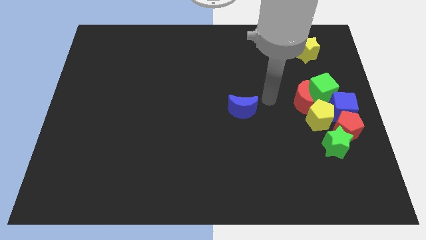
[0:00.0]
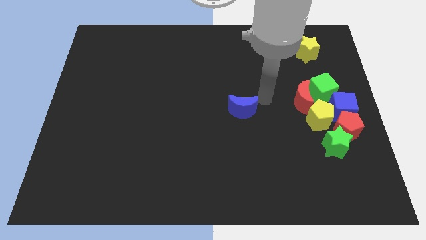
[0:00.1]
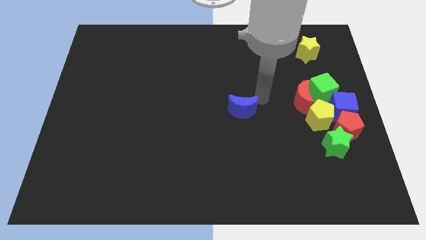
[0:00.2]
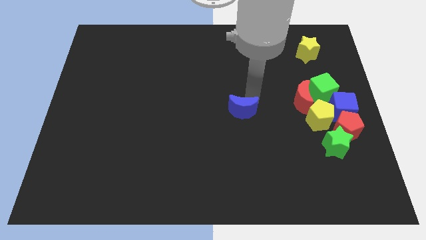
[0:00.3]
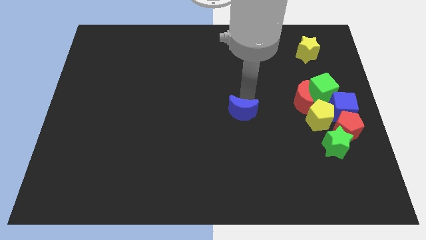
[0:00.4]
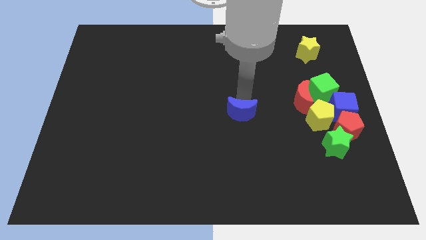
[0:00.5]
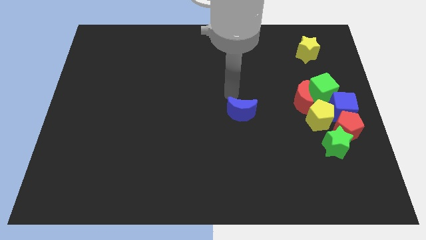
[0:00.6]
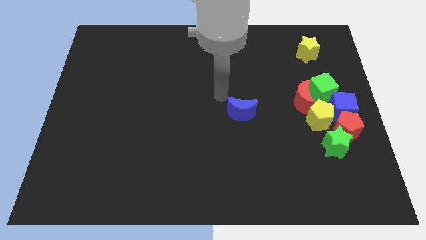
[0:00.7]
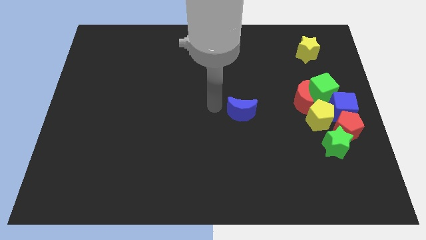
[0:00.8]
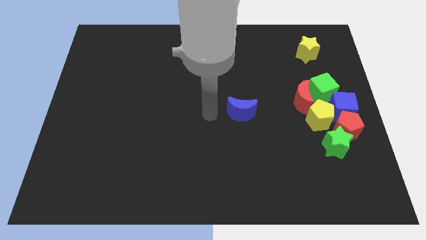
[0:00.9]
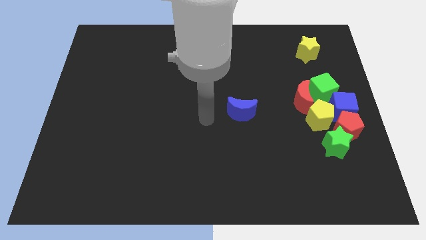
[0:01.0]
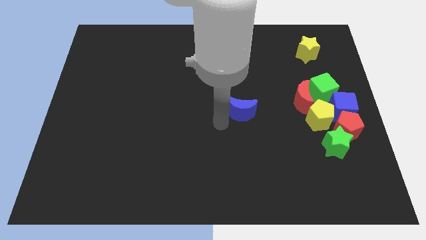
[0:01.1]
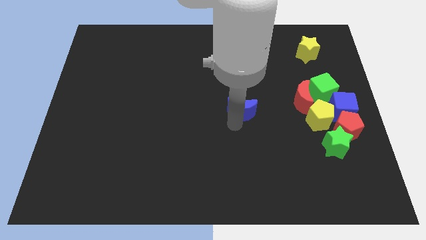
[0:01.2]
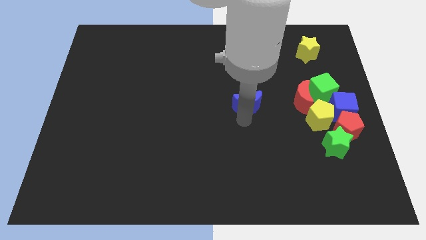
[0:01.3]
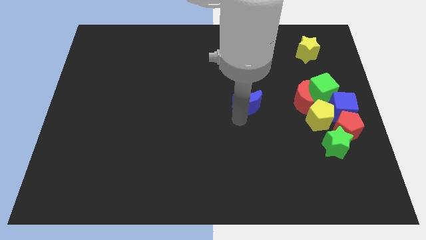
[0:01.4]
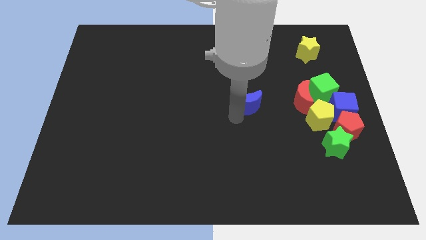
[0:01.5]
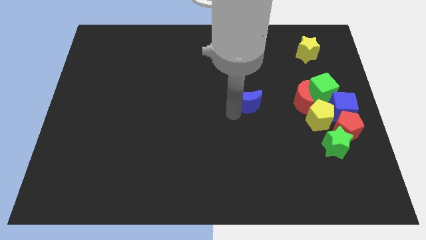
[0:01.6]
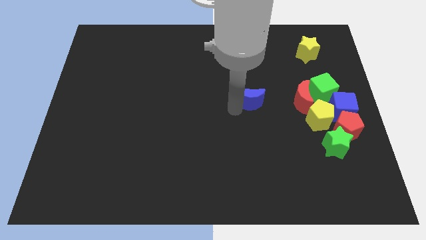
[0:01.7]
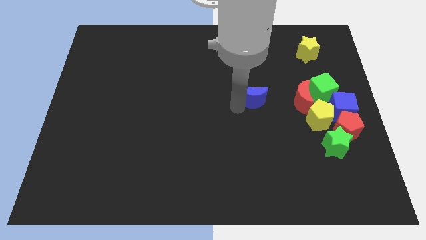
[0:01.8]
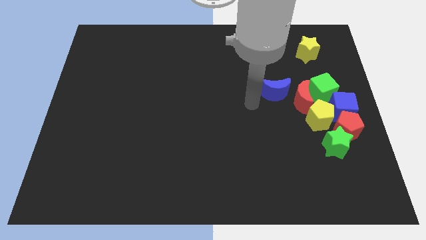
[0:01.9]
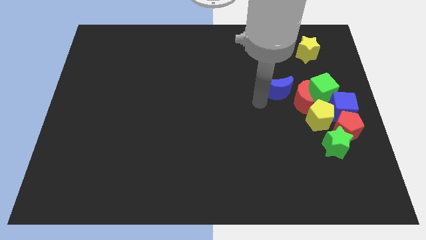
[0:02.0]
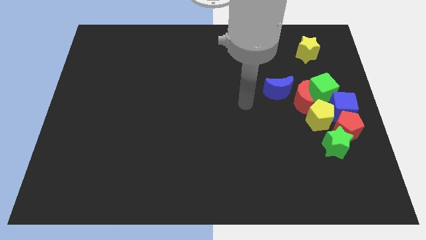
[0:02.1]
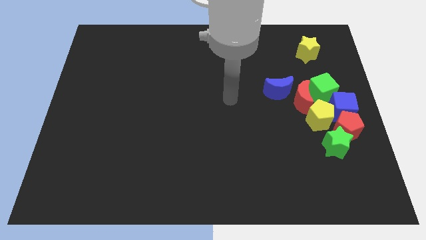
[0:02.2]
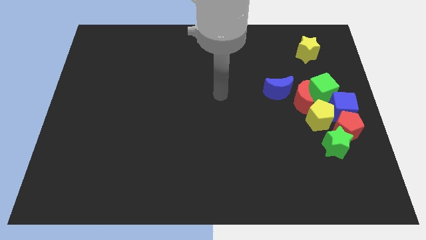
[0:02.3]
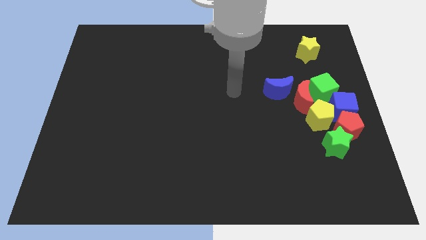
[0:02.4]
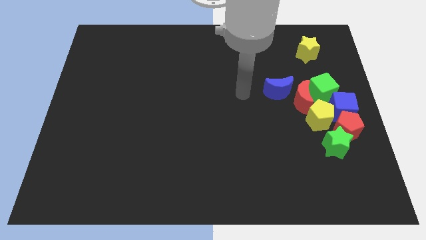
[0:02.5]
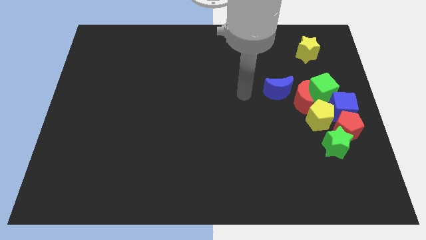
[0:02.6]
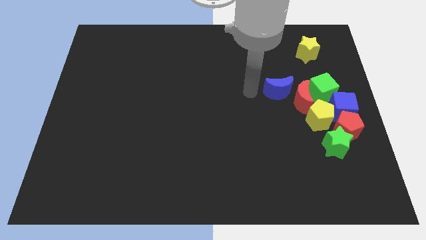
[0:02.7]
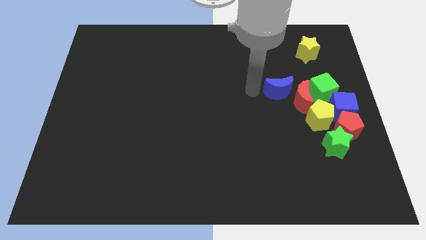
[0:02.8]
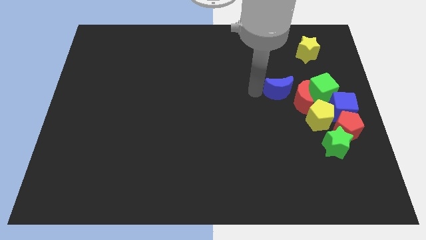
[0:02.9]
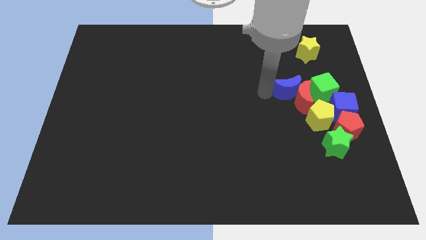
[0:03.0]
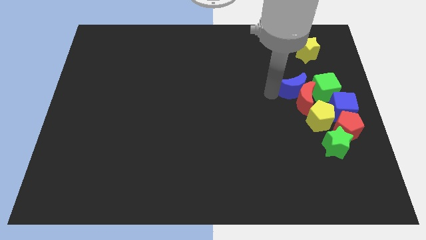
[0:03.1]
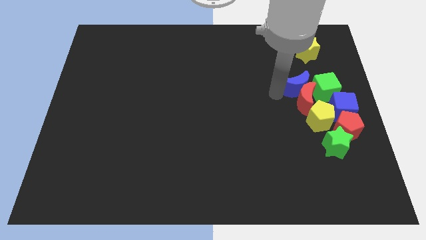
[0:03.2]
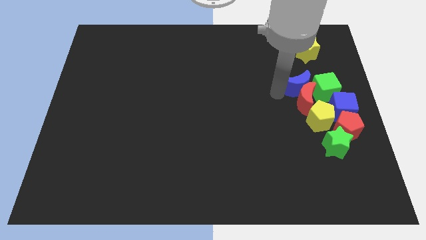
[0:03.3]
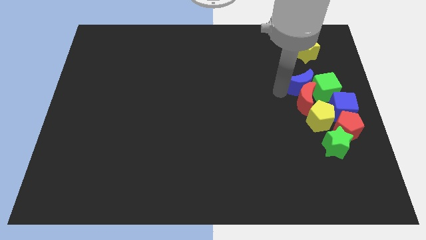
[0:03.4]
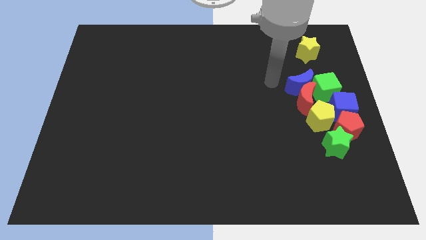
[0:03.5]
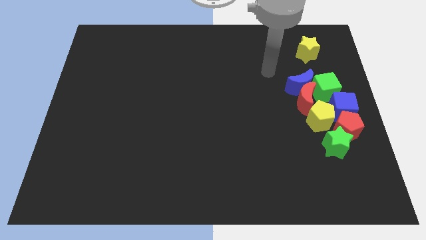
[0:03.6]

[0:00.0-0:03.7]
move the blue crescent towards the top of the red crescent

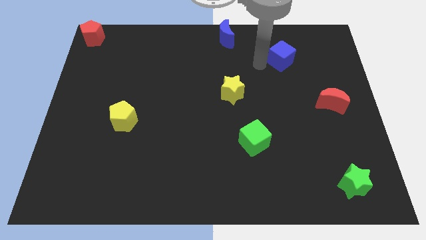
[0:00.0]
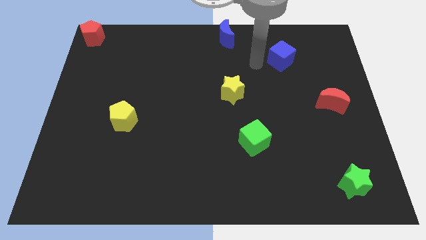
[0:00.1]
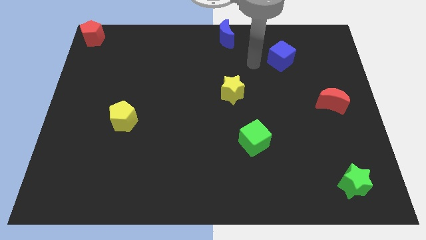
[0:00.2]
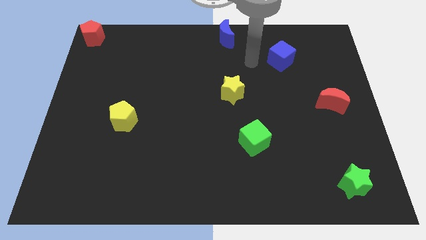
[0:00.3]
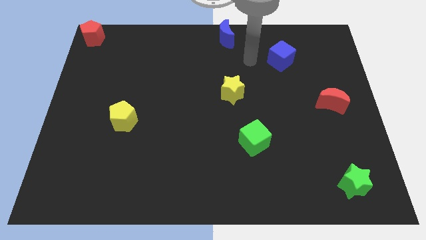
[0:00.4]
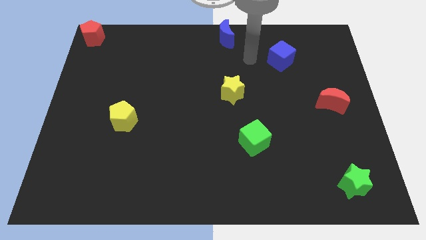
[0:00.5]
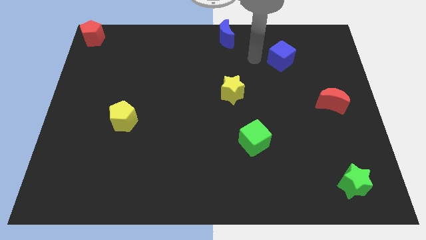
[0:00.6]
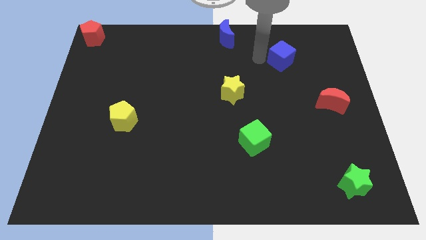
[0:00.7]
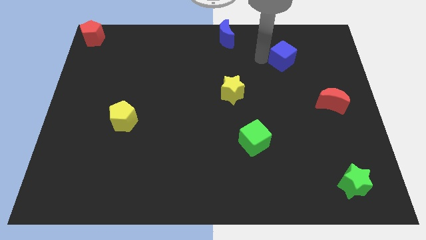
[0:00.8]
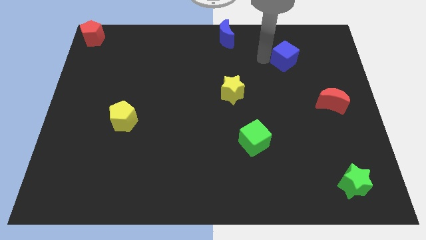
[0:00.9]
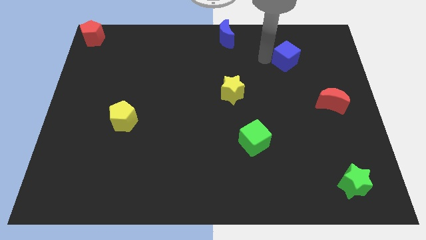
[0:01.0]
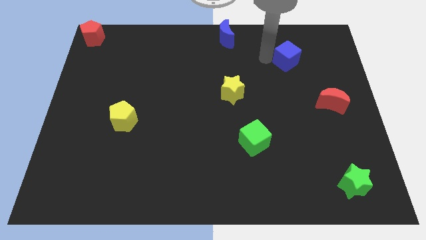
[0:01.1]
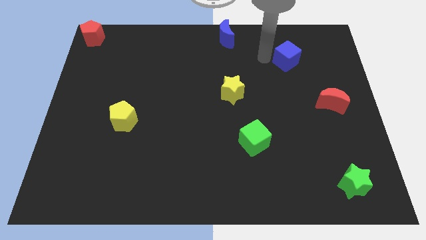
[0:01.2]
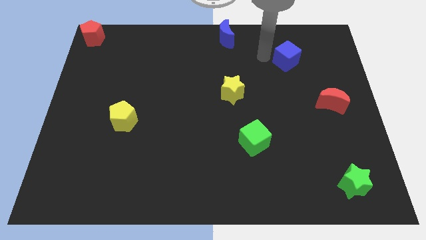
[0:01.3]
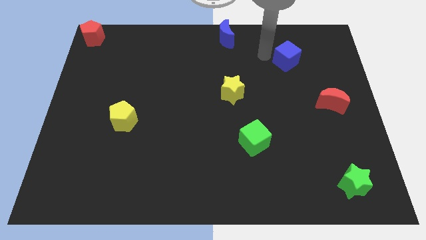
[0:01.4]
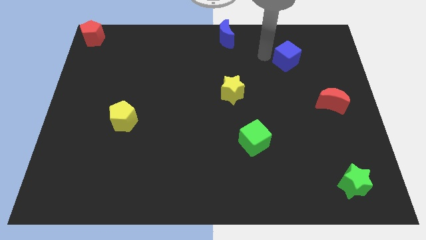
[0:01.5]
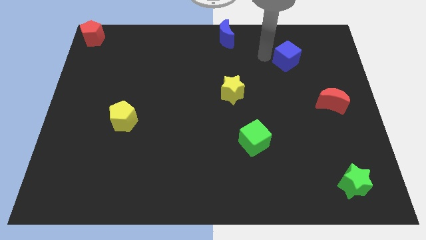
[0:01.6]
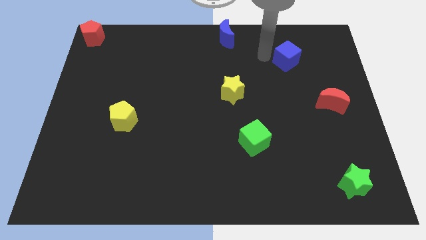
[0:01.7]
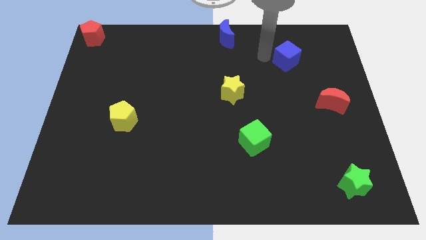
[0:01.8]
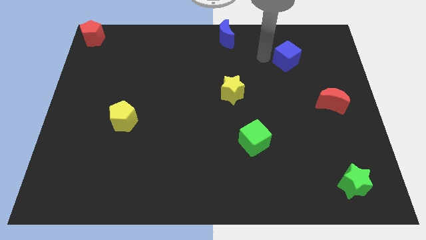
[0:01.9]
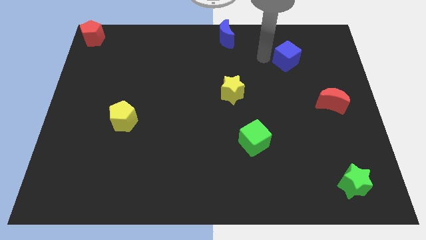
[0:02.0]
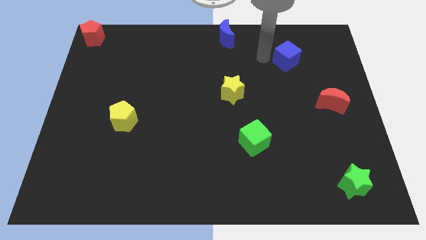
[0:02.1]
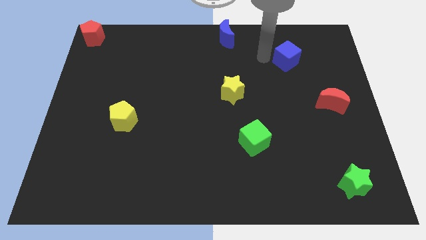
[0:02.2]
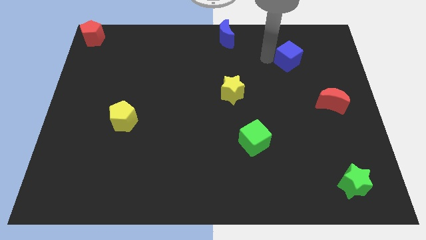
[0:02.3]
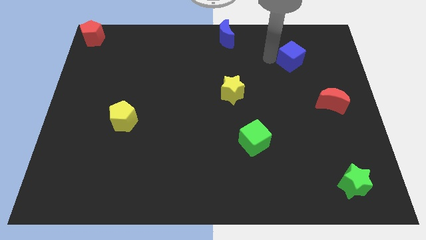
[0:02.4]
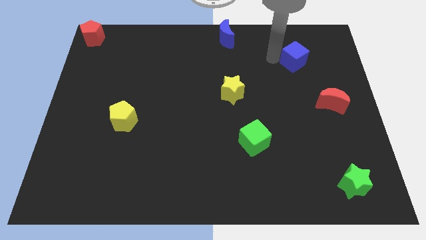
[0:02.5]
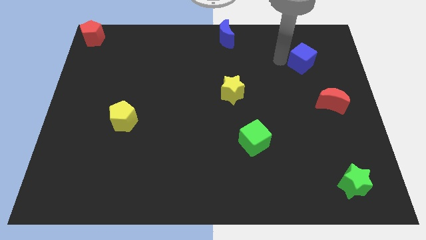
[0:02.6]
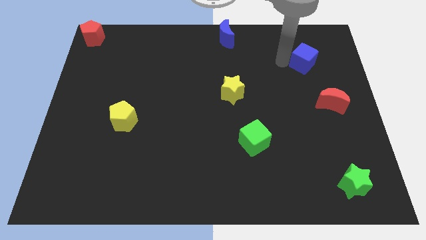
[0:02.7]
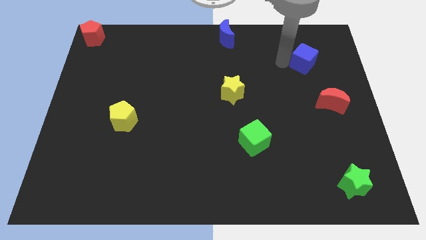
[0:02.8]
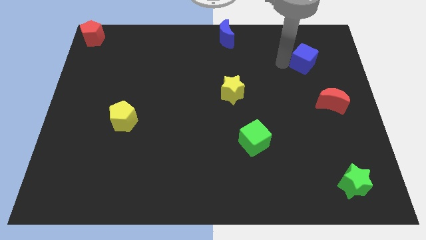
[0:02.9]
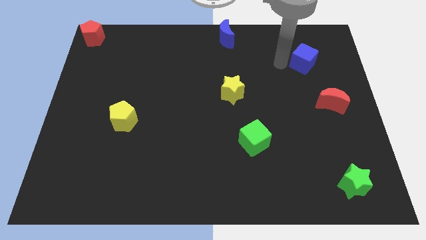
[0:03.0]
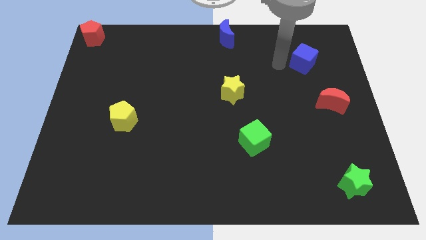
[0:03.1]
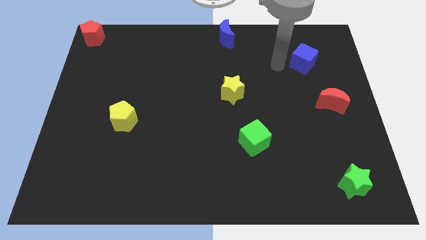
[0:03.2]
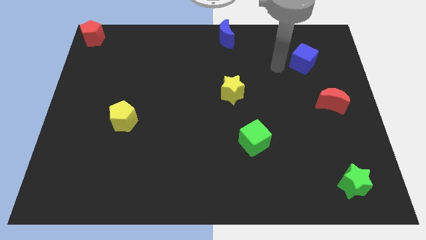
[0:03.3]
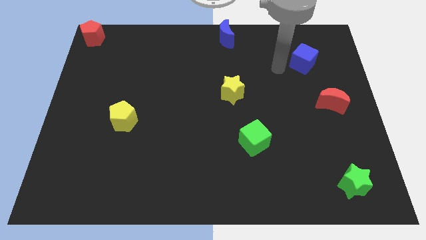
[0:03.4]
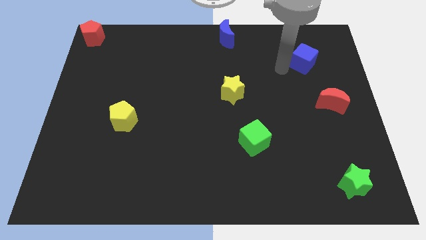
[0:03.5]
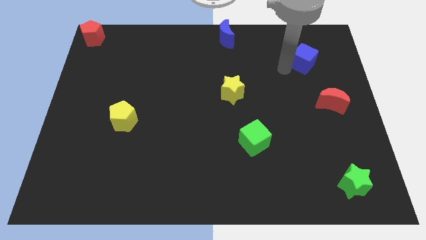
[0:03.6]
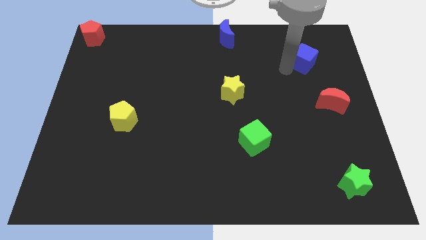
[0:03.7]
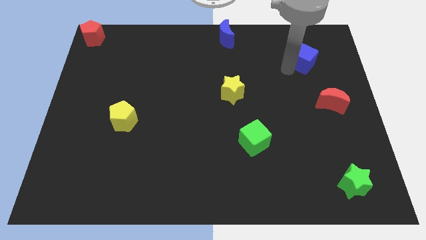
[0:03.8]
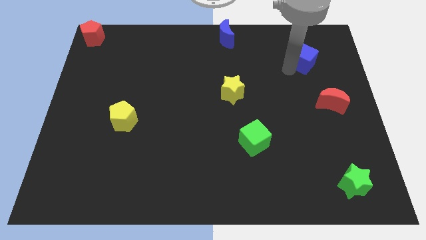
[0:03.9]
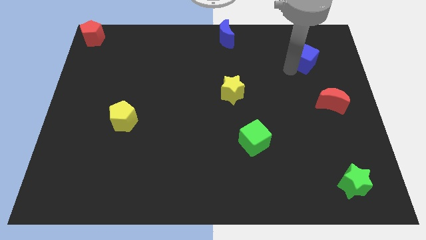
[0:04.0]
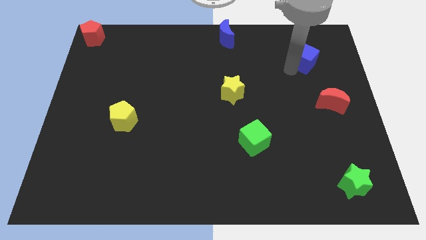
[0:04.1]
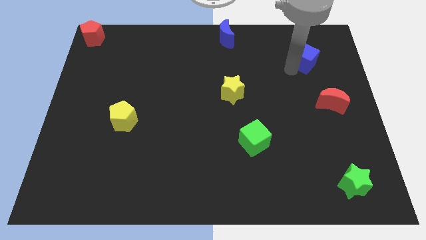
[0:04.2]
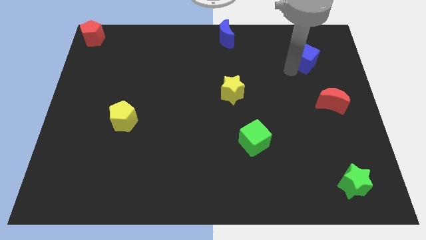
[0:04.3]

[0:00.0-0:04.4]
push the blue cube towards the top right of the board

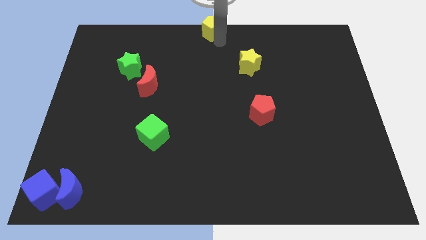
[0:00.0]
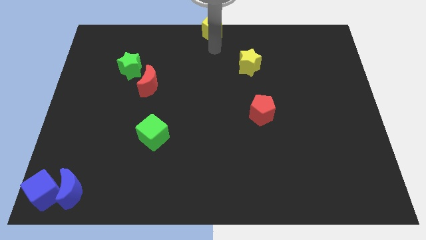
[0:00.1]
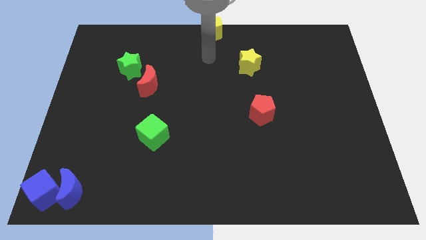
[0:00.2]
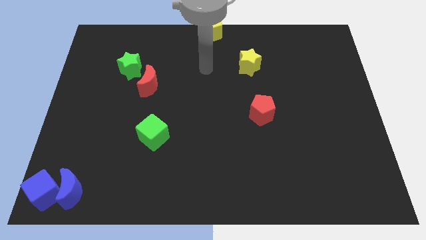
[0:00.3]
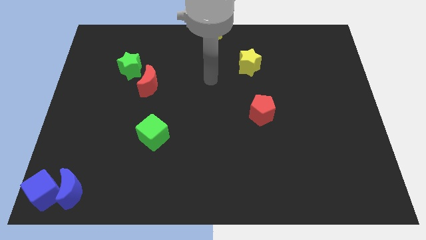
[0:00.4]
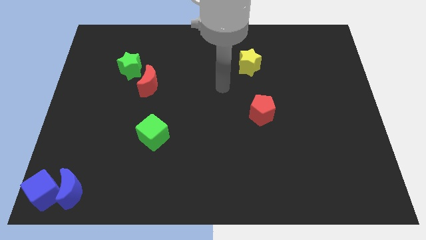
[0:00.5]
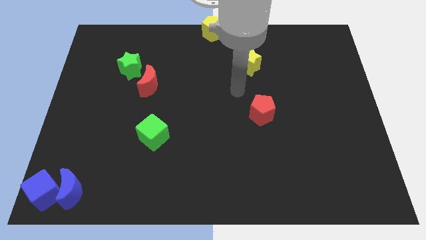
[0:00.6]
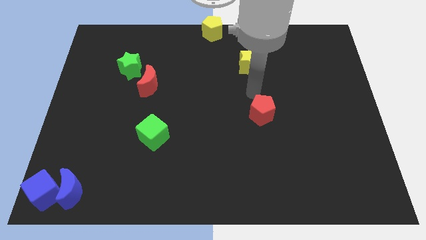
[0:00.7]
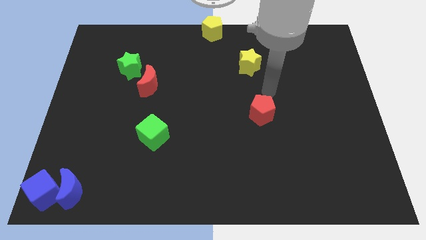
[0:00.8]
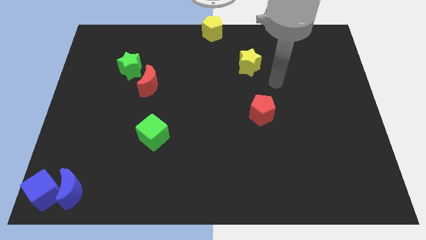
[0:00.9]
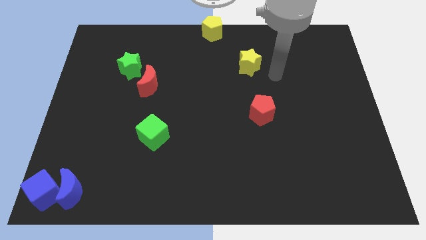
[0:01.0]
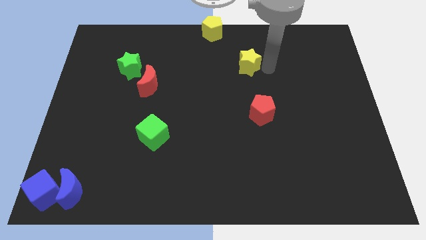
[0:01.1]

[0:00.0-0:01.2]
move your arm towards the yellow star
